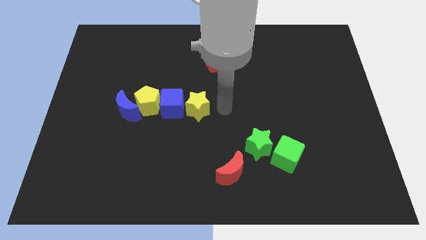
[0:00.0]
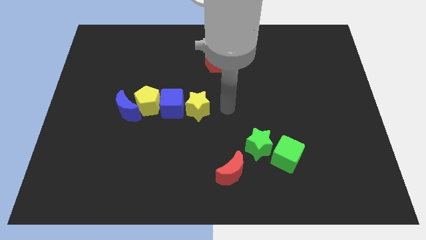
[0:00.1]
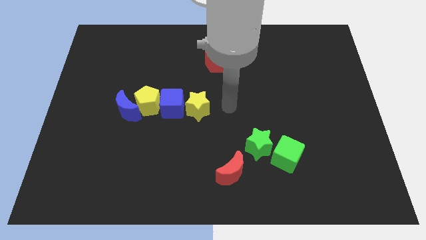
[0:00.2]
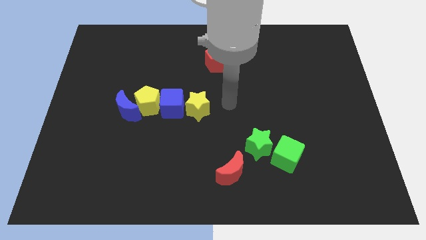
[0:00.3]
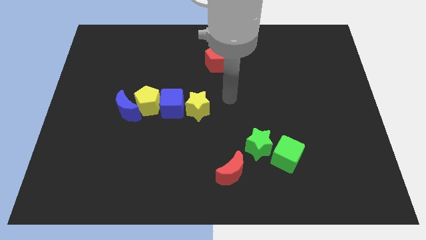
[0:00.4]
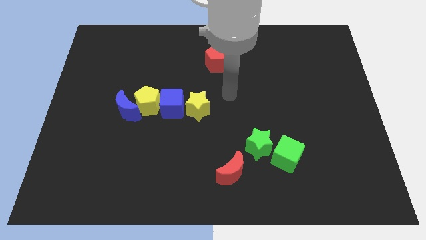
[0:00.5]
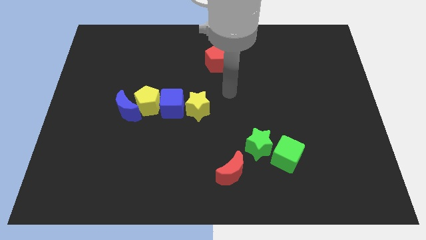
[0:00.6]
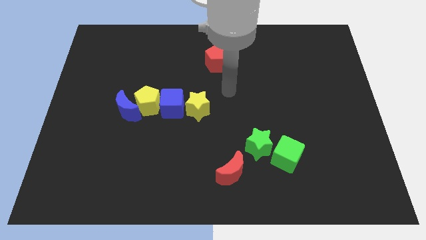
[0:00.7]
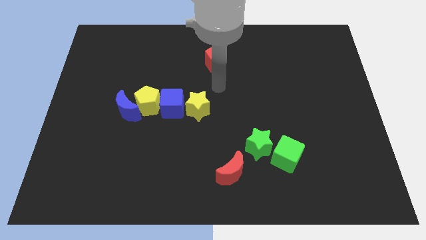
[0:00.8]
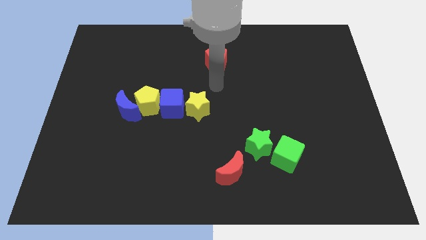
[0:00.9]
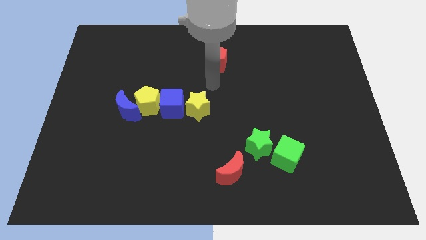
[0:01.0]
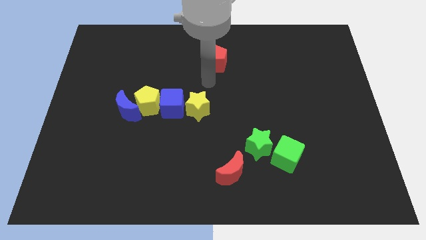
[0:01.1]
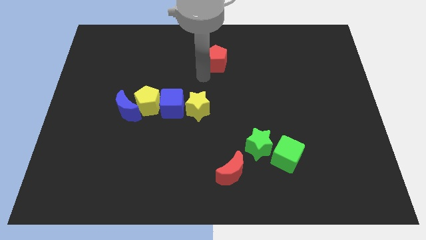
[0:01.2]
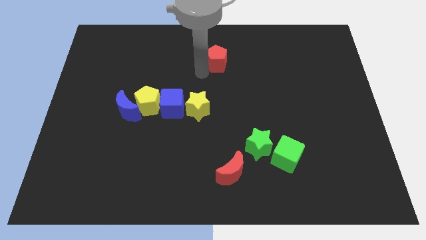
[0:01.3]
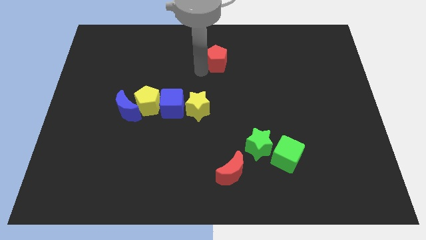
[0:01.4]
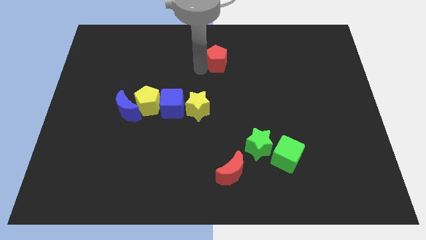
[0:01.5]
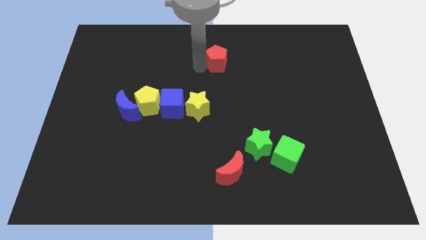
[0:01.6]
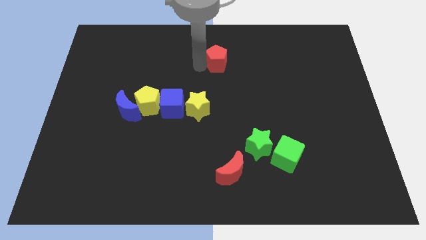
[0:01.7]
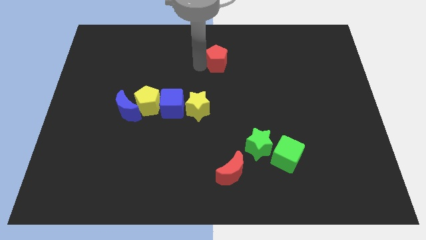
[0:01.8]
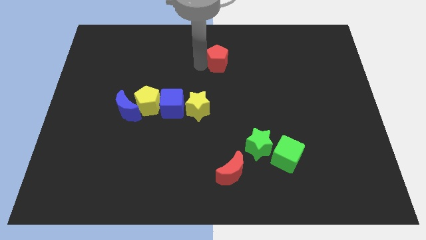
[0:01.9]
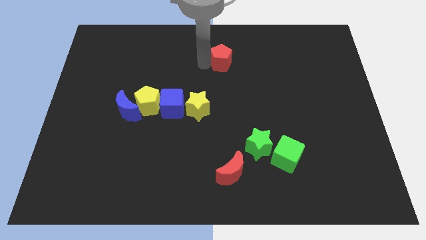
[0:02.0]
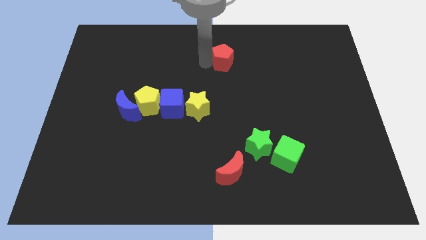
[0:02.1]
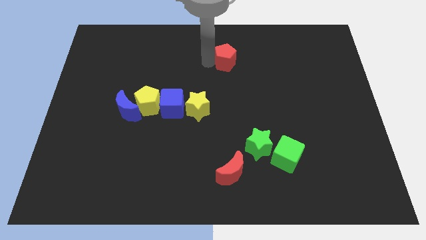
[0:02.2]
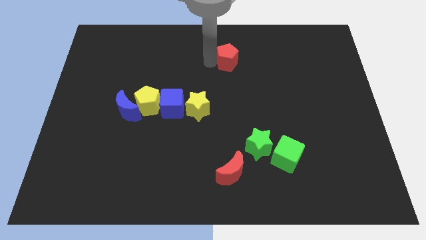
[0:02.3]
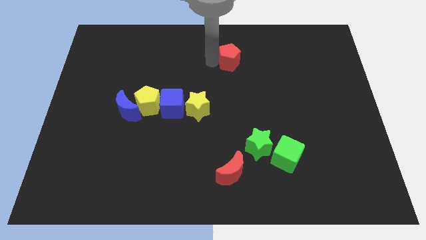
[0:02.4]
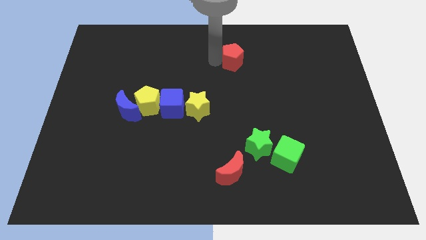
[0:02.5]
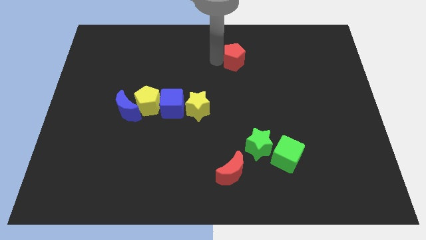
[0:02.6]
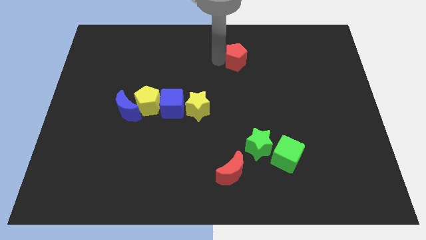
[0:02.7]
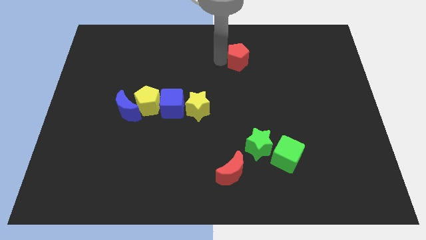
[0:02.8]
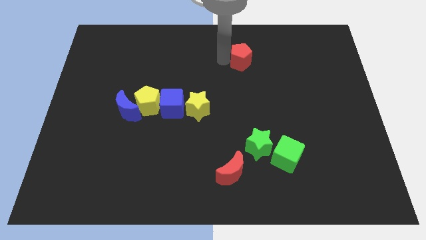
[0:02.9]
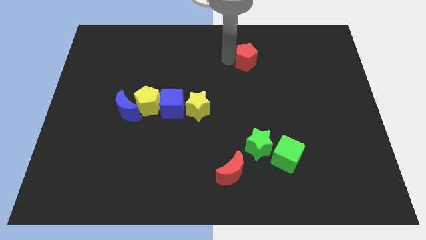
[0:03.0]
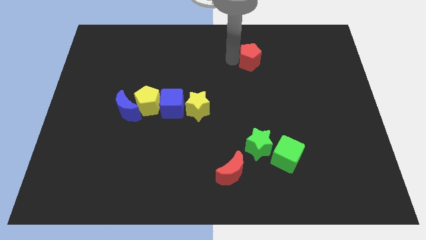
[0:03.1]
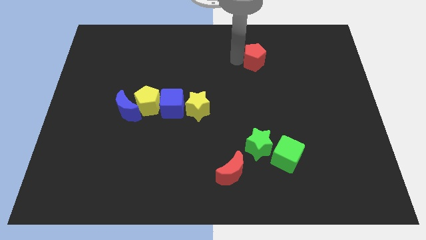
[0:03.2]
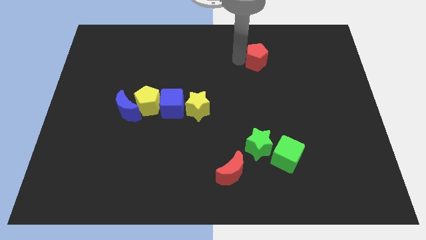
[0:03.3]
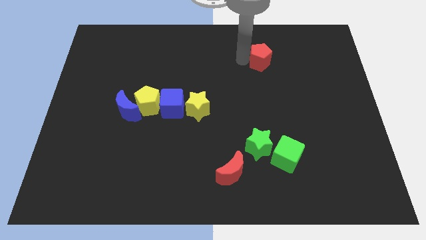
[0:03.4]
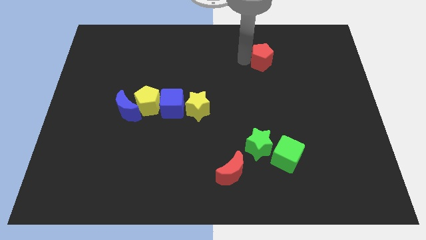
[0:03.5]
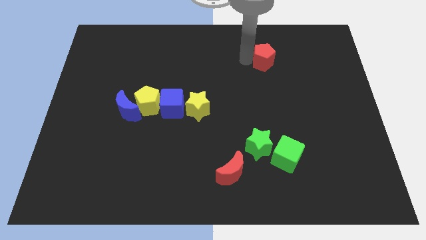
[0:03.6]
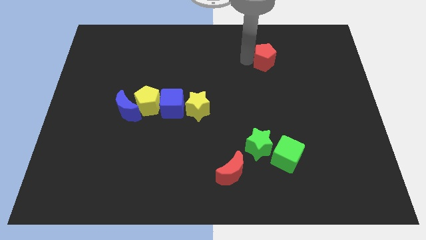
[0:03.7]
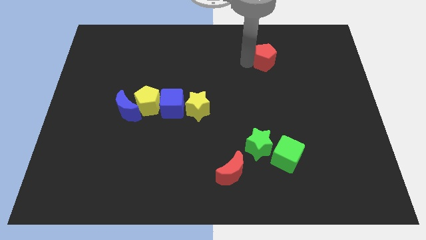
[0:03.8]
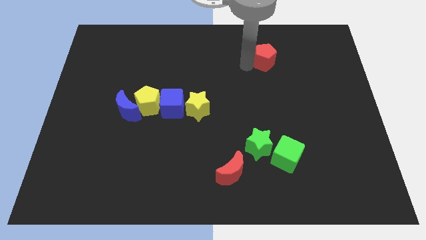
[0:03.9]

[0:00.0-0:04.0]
push the red pentagon slightly to the right side of the board

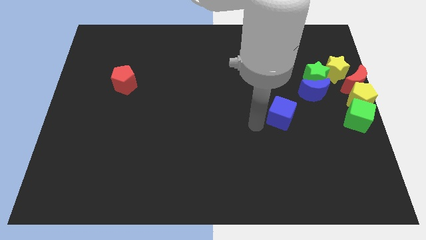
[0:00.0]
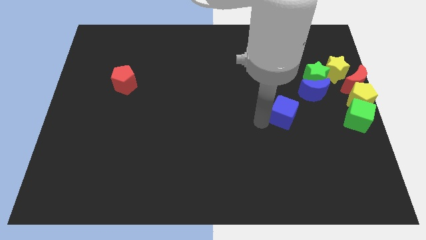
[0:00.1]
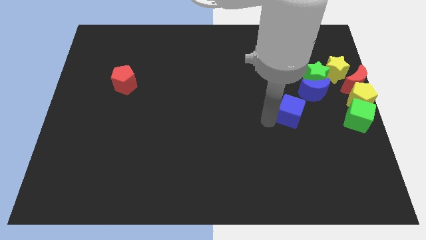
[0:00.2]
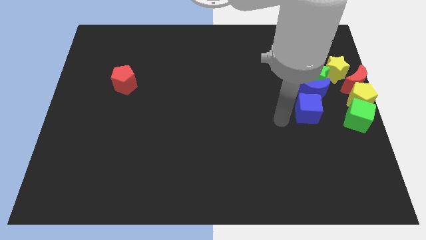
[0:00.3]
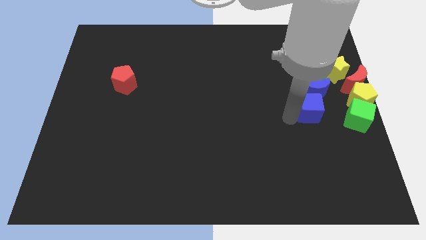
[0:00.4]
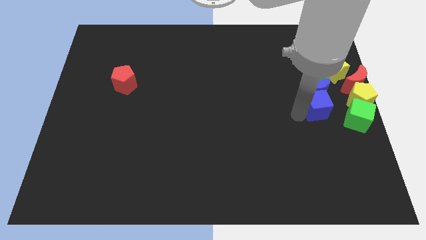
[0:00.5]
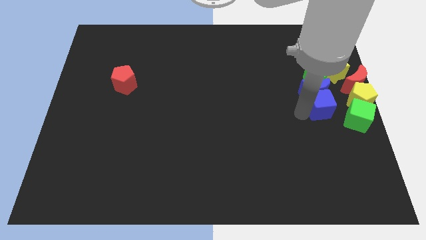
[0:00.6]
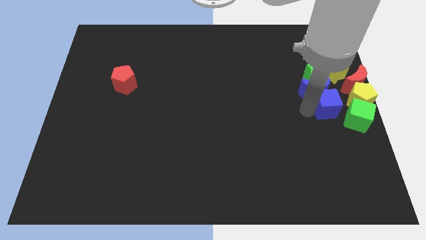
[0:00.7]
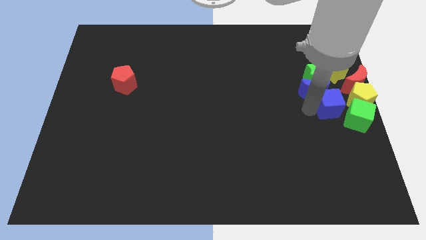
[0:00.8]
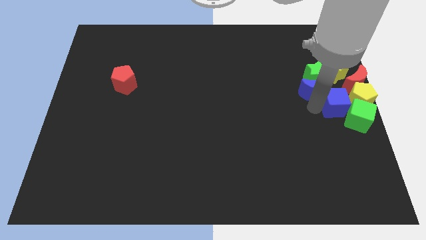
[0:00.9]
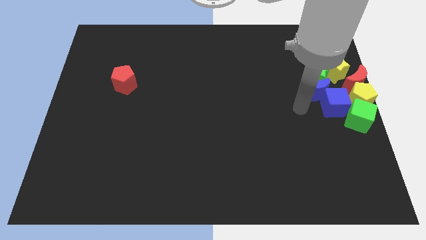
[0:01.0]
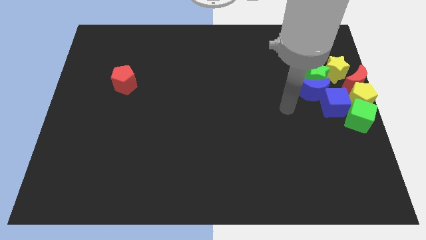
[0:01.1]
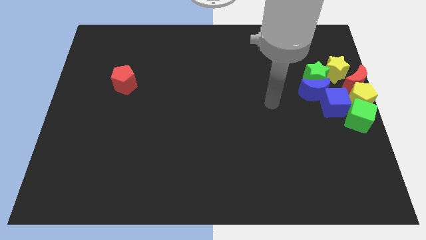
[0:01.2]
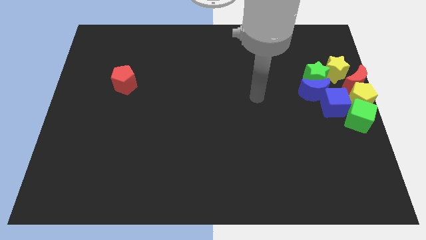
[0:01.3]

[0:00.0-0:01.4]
push the blue cube to the left side of the yellow pentagon

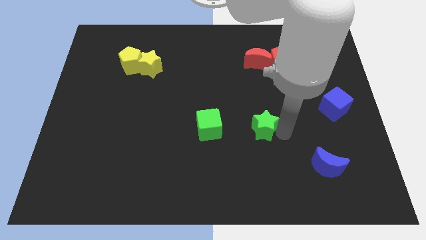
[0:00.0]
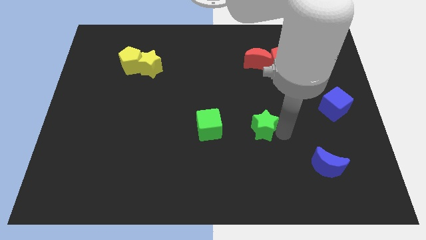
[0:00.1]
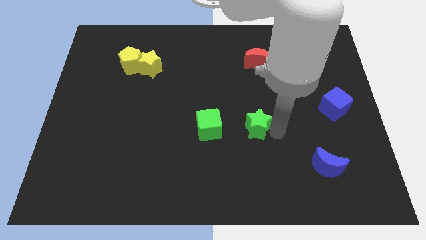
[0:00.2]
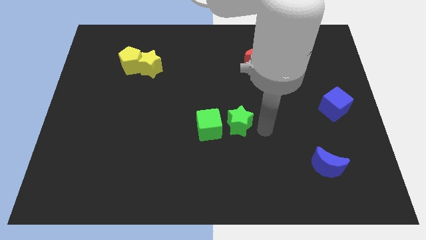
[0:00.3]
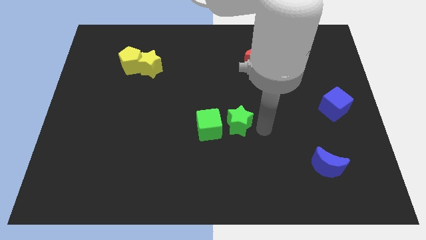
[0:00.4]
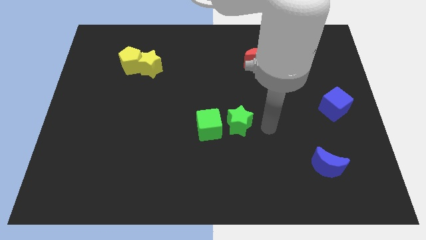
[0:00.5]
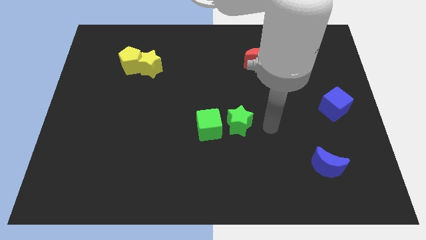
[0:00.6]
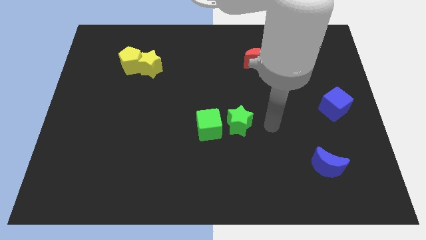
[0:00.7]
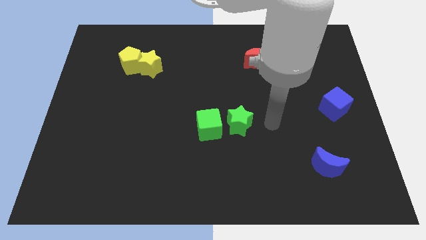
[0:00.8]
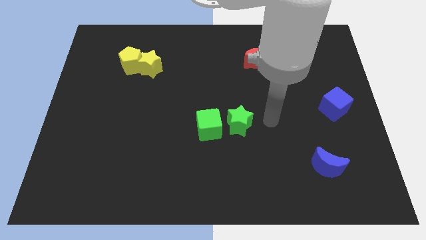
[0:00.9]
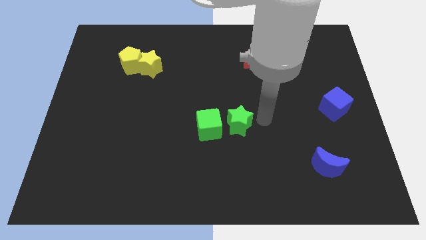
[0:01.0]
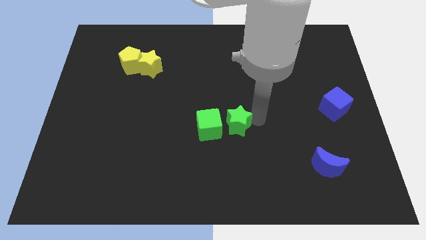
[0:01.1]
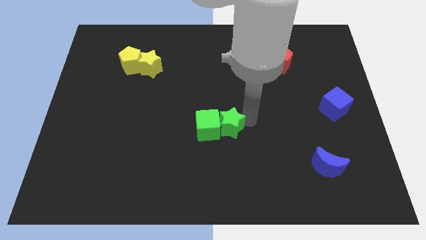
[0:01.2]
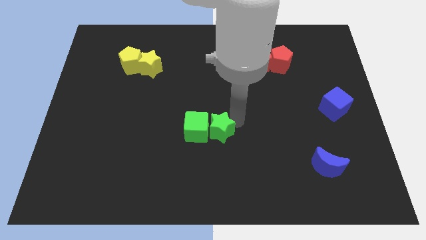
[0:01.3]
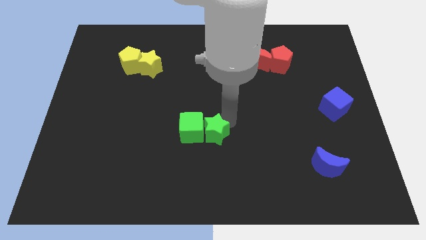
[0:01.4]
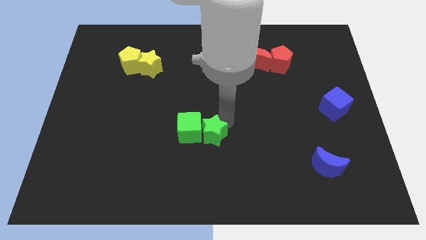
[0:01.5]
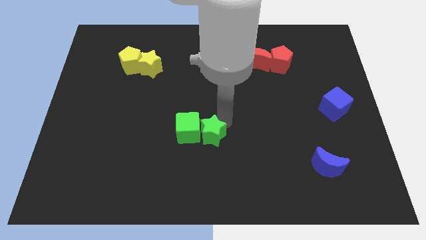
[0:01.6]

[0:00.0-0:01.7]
push green star into green cube

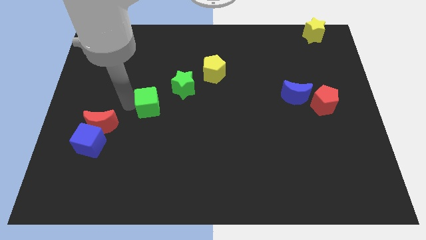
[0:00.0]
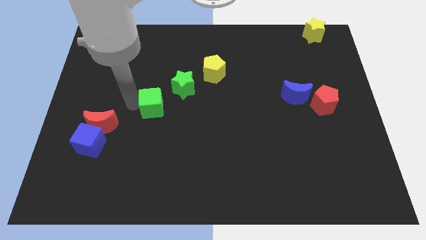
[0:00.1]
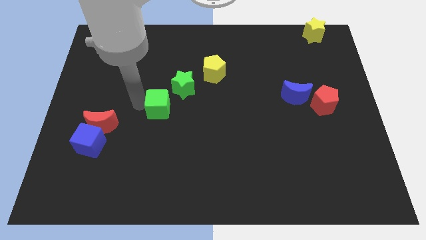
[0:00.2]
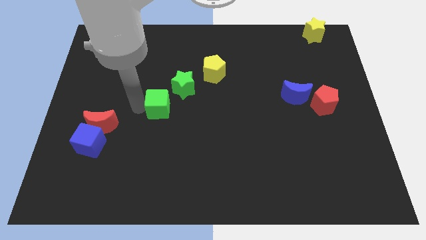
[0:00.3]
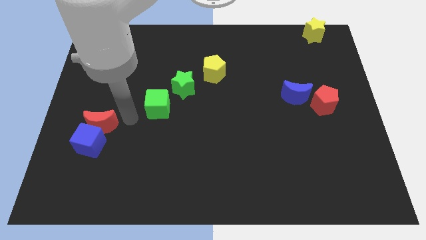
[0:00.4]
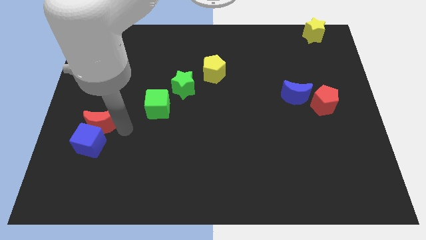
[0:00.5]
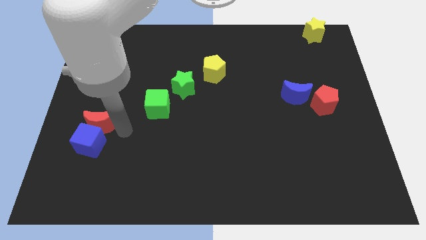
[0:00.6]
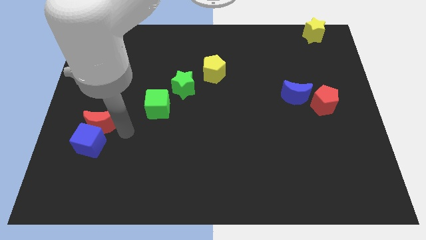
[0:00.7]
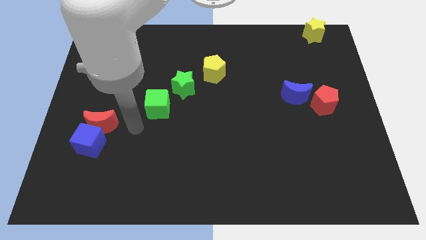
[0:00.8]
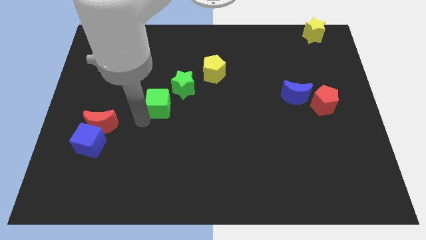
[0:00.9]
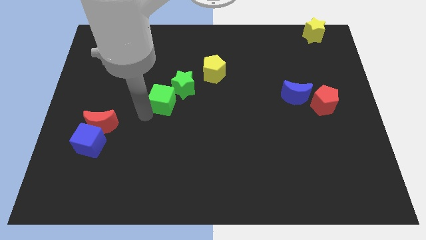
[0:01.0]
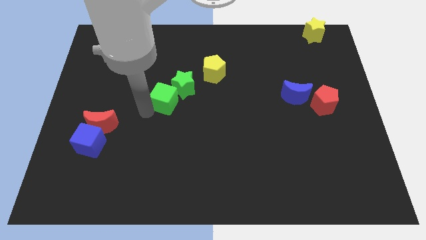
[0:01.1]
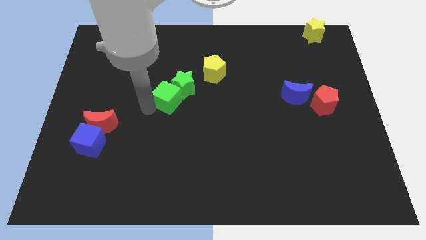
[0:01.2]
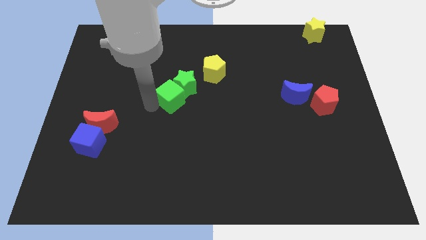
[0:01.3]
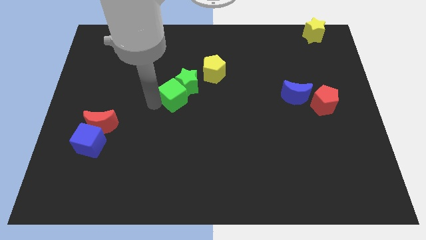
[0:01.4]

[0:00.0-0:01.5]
push the green cube into green star

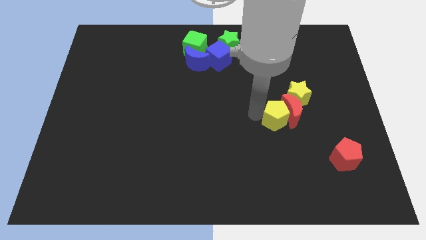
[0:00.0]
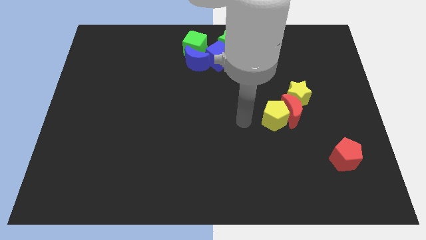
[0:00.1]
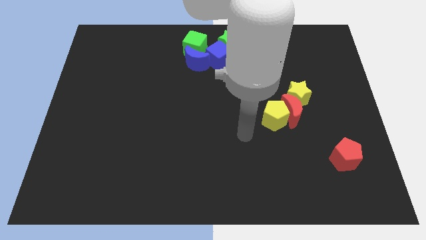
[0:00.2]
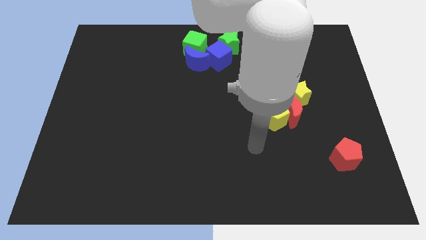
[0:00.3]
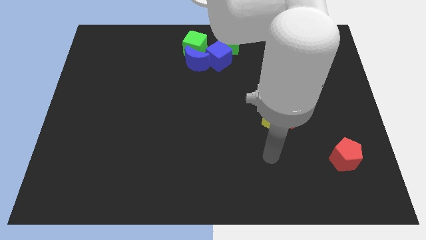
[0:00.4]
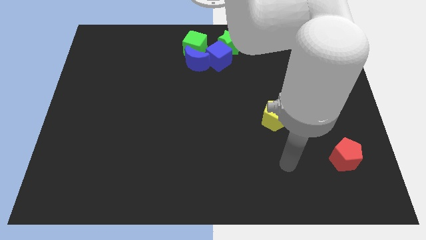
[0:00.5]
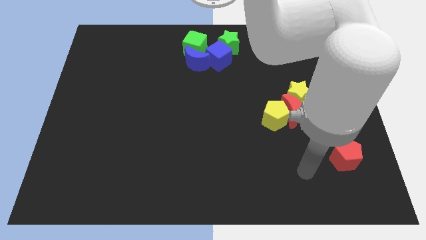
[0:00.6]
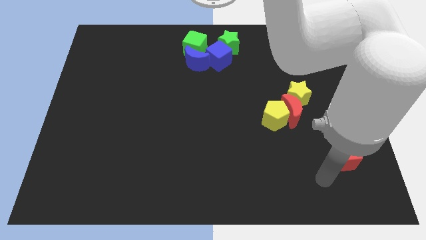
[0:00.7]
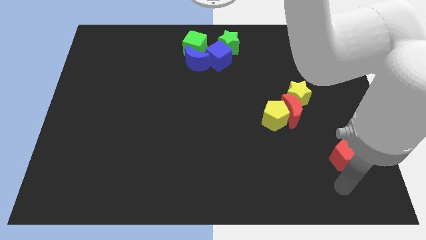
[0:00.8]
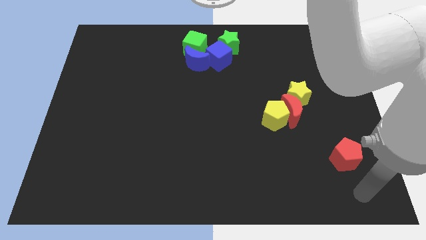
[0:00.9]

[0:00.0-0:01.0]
point your hand at the bottom side of the red pentagon
